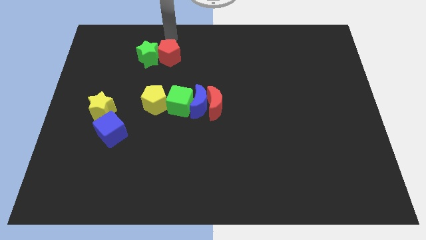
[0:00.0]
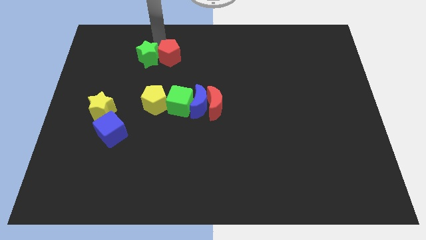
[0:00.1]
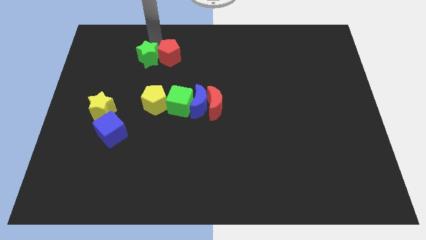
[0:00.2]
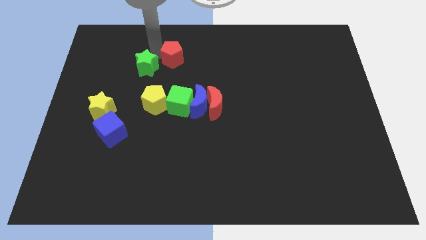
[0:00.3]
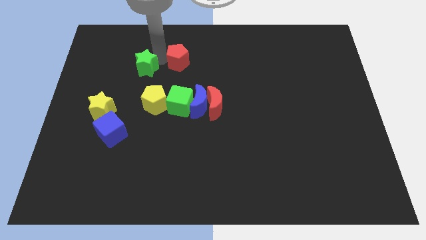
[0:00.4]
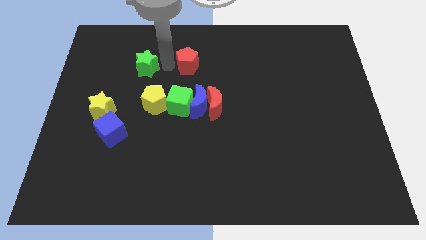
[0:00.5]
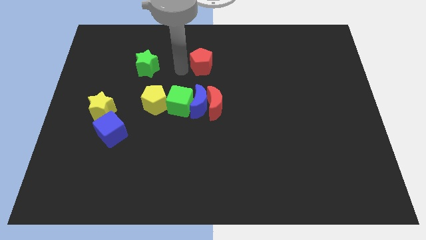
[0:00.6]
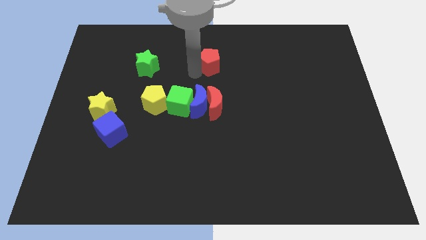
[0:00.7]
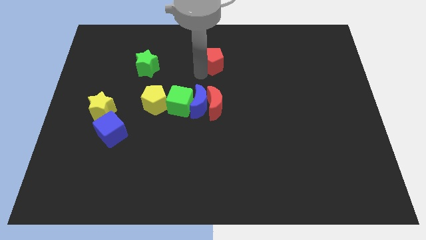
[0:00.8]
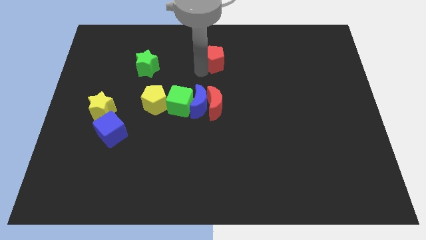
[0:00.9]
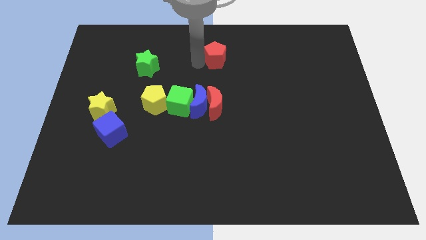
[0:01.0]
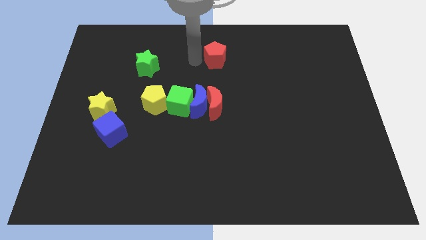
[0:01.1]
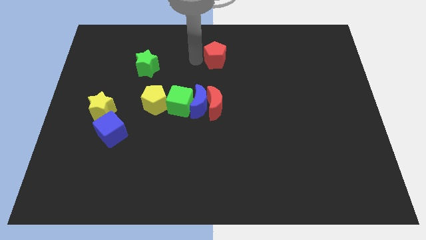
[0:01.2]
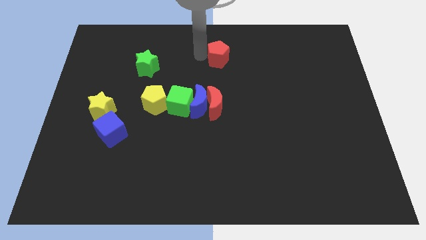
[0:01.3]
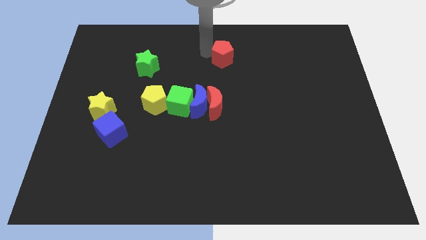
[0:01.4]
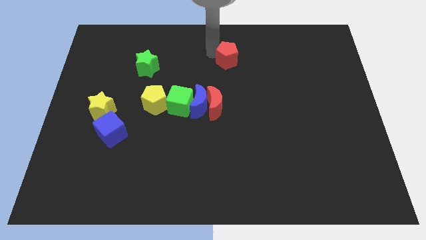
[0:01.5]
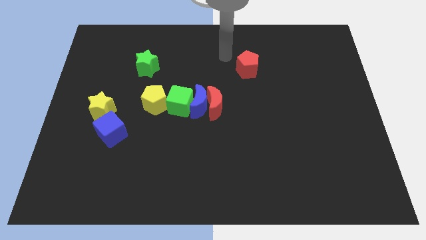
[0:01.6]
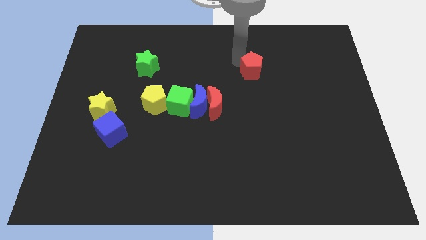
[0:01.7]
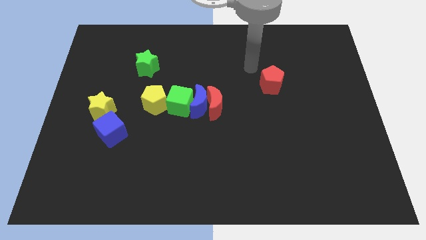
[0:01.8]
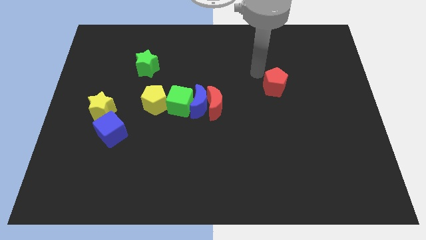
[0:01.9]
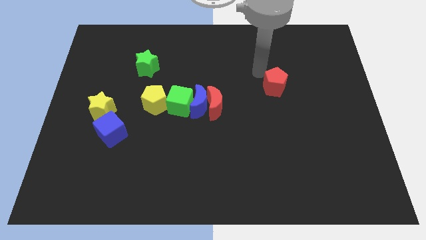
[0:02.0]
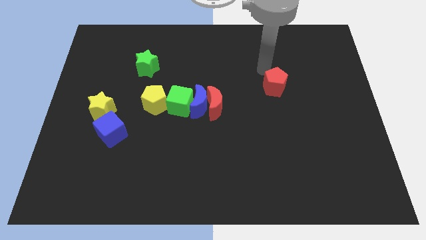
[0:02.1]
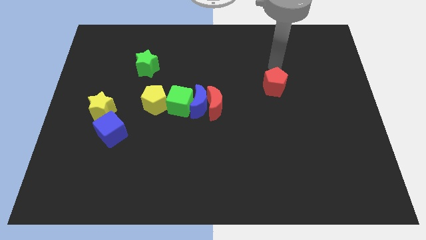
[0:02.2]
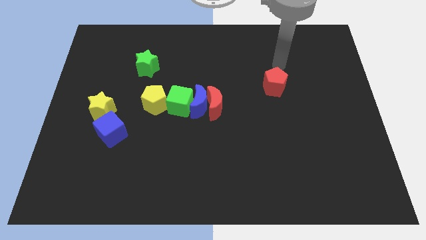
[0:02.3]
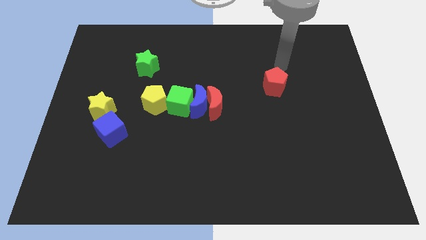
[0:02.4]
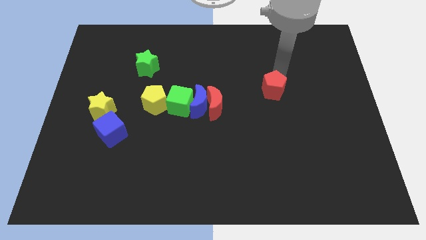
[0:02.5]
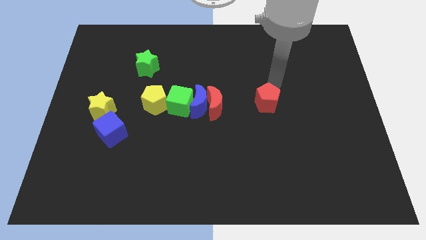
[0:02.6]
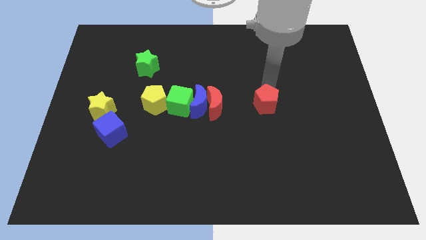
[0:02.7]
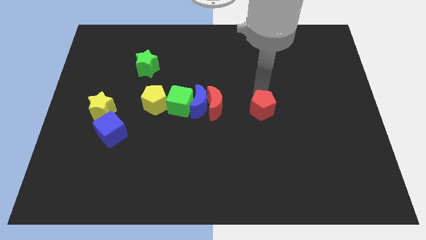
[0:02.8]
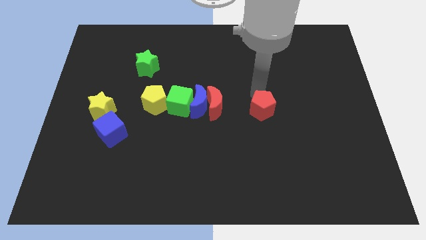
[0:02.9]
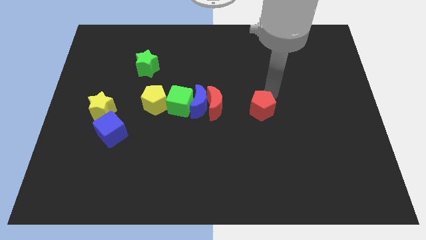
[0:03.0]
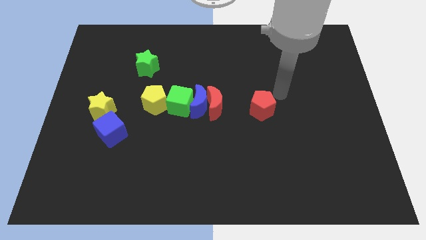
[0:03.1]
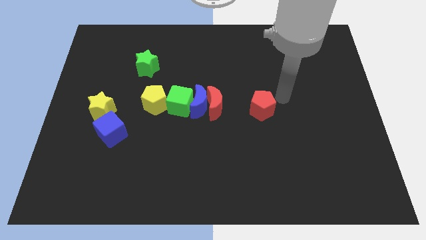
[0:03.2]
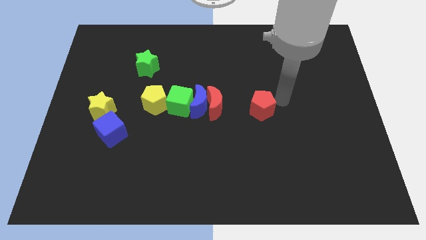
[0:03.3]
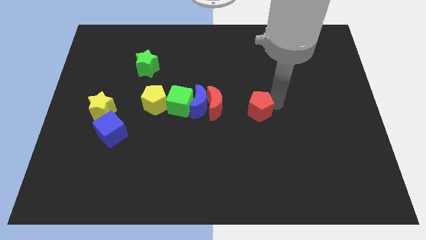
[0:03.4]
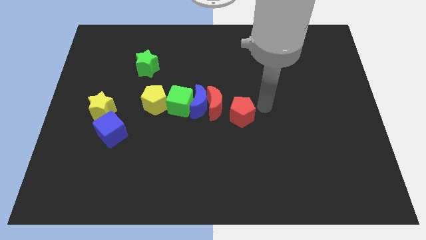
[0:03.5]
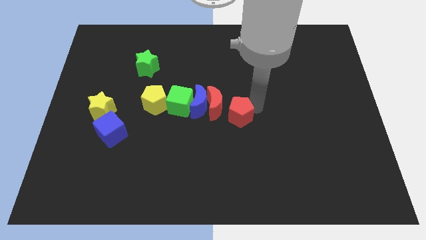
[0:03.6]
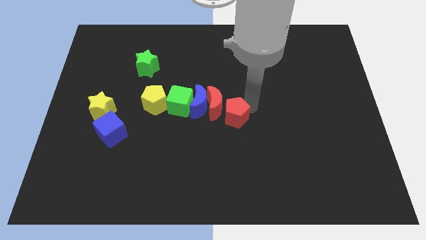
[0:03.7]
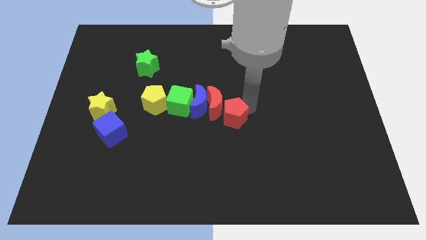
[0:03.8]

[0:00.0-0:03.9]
place red pentagon to the right of red moon

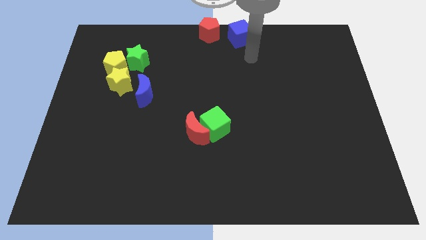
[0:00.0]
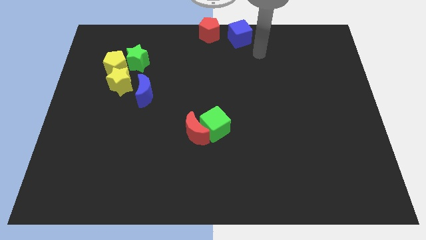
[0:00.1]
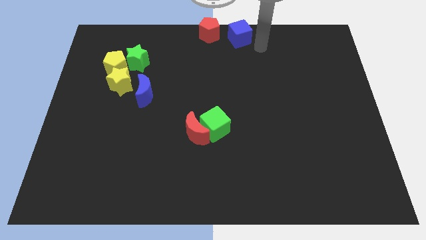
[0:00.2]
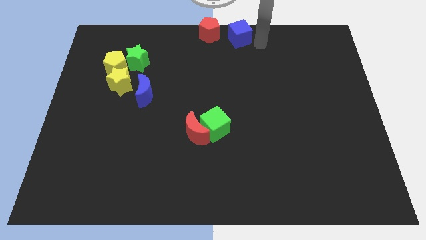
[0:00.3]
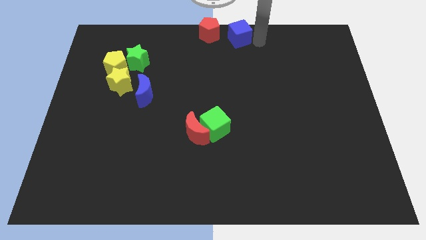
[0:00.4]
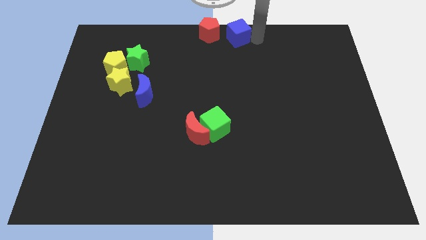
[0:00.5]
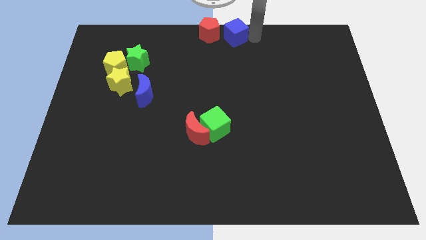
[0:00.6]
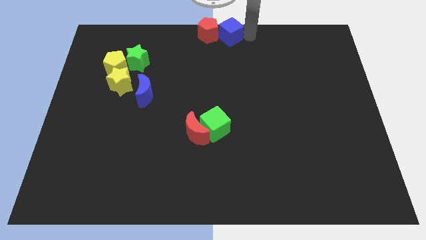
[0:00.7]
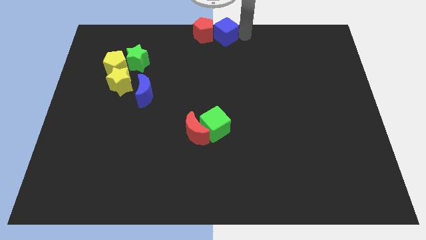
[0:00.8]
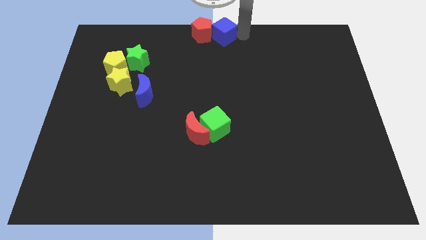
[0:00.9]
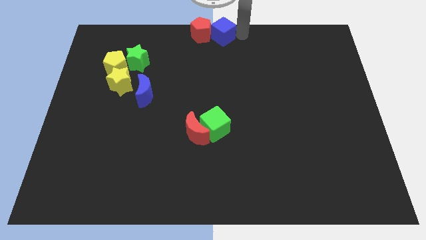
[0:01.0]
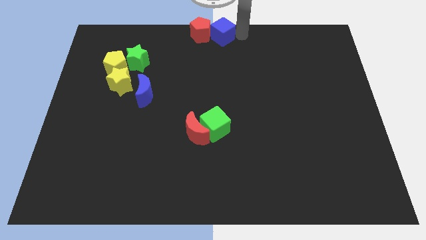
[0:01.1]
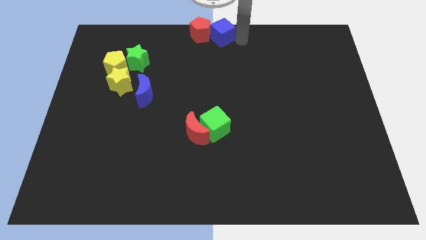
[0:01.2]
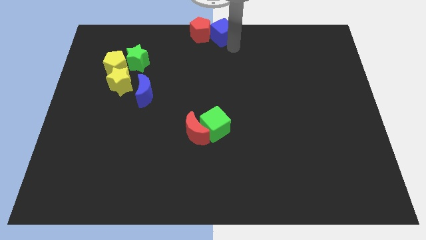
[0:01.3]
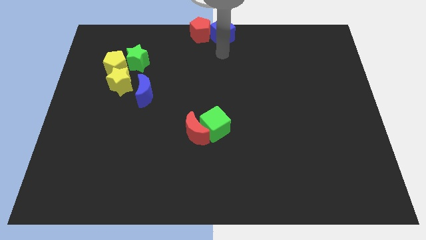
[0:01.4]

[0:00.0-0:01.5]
push the blue cube into the red pentagon

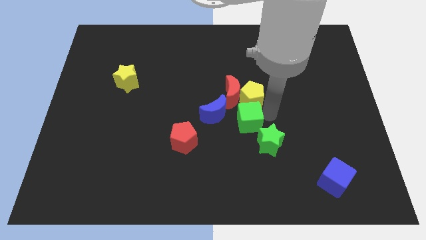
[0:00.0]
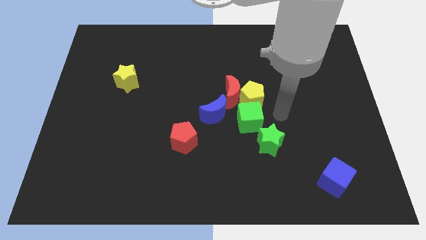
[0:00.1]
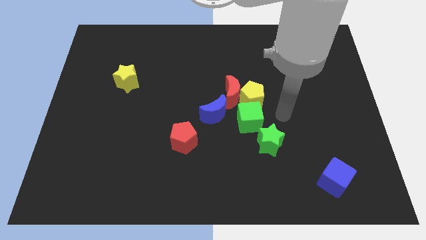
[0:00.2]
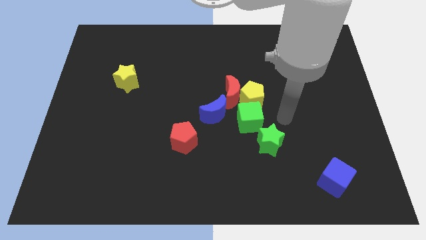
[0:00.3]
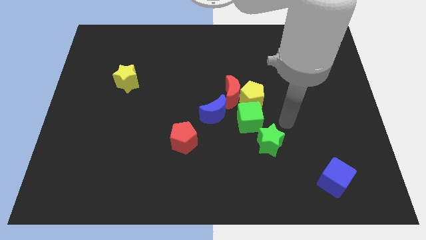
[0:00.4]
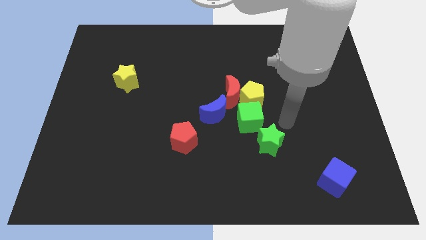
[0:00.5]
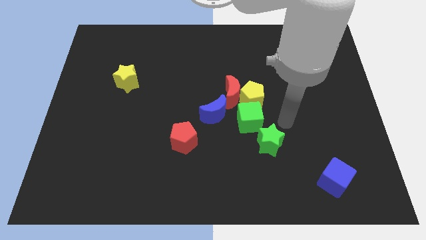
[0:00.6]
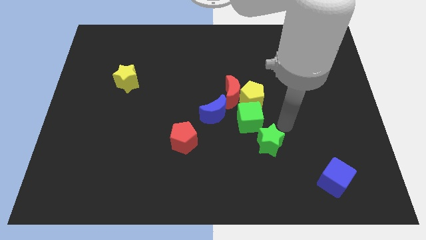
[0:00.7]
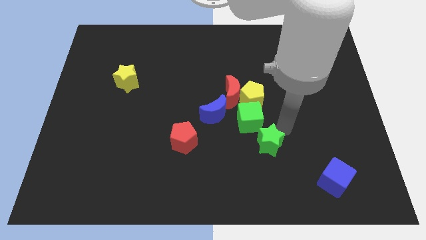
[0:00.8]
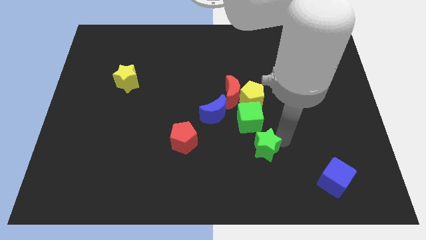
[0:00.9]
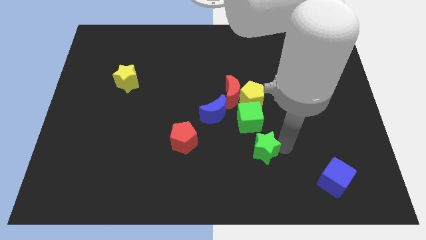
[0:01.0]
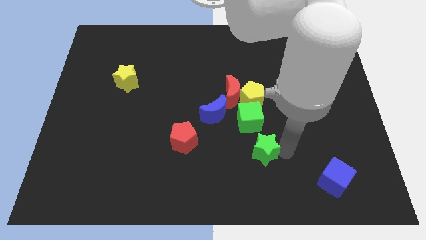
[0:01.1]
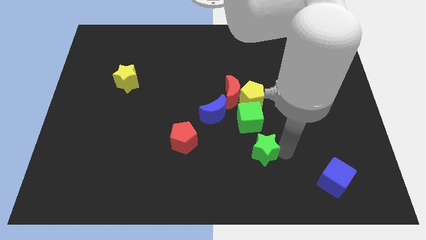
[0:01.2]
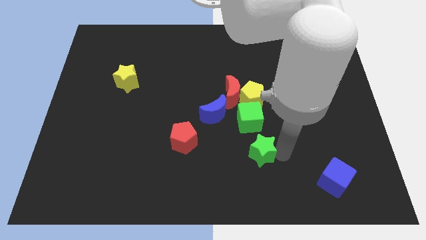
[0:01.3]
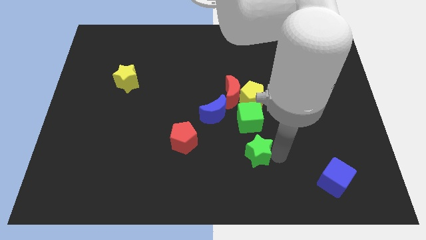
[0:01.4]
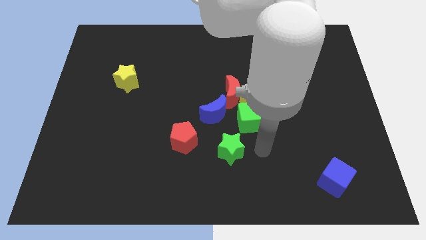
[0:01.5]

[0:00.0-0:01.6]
move the green star to the bottom left of the green cube

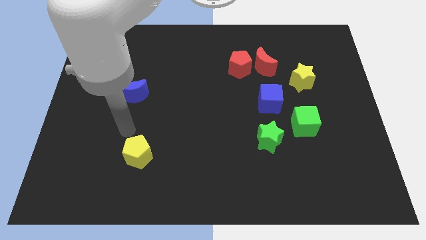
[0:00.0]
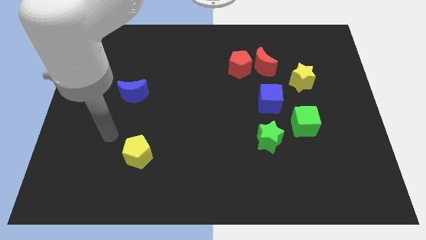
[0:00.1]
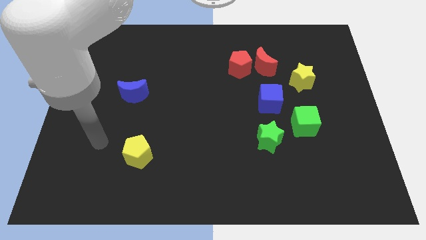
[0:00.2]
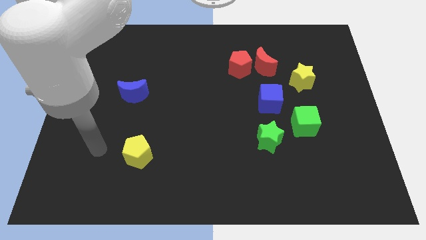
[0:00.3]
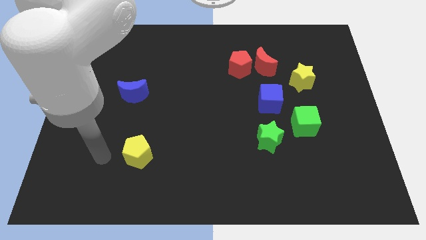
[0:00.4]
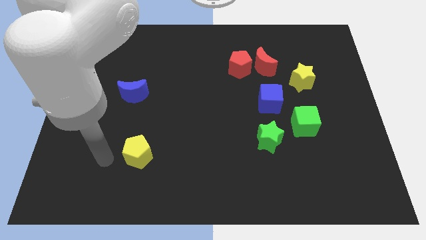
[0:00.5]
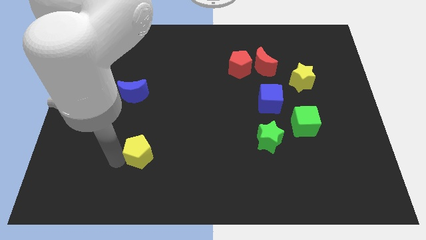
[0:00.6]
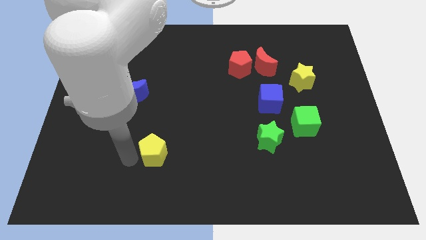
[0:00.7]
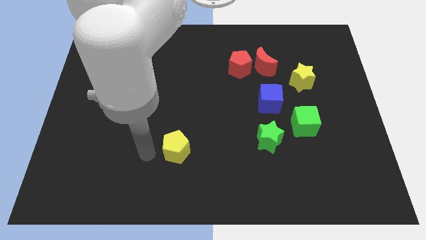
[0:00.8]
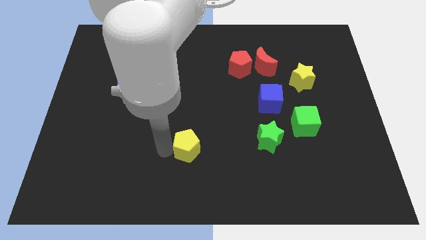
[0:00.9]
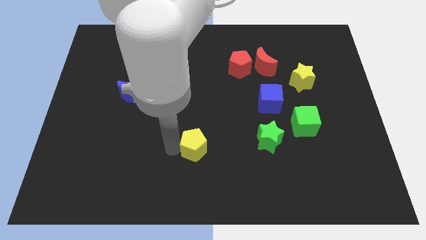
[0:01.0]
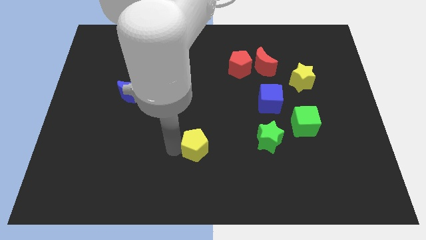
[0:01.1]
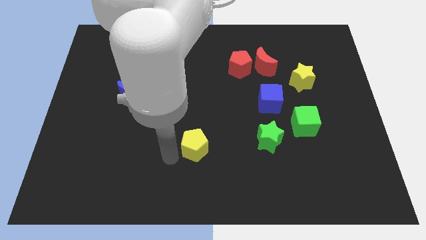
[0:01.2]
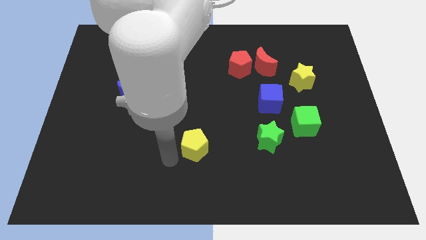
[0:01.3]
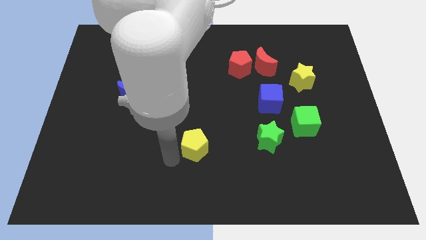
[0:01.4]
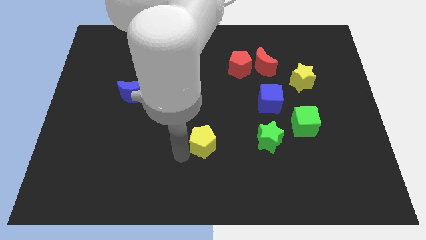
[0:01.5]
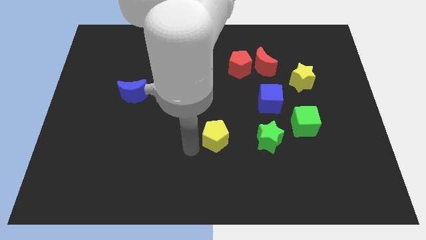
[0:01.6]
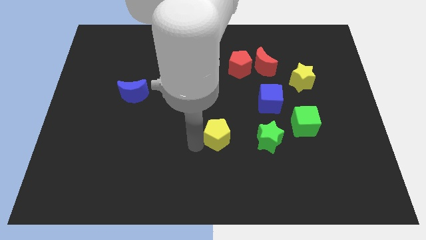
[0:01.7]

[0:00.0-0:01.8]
move yellow pentagon left beside the green star

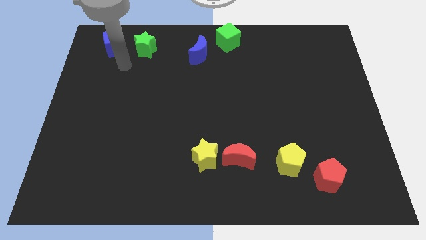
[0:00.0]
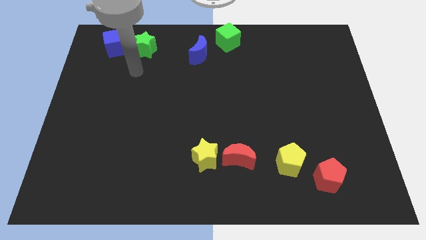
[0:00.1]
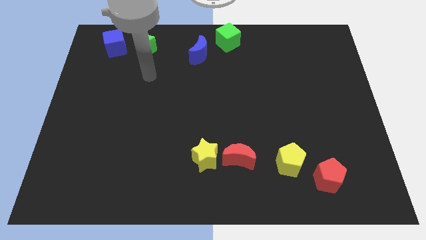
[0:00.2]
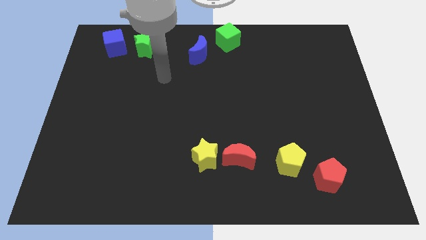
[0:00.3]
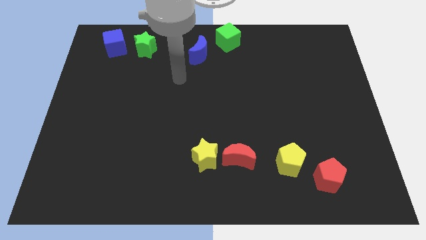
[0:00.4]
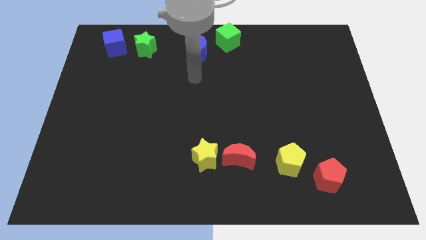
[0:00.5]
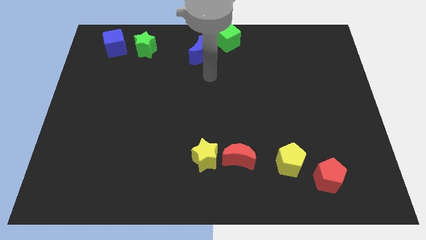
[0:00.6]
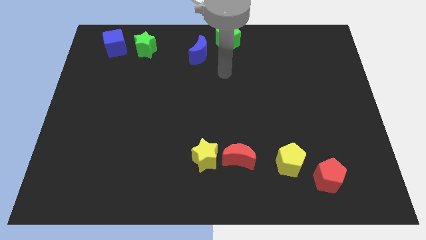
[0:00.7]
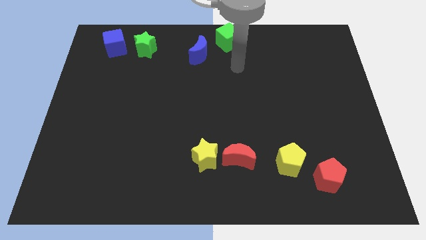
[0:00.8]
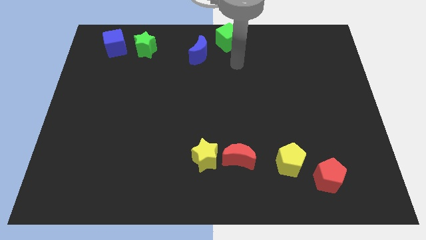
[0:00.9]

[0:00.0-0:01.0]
move your arm away from the blue cube
